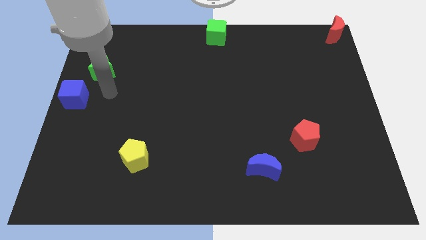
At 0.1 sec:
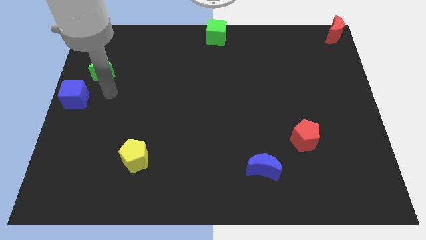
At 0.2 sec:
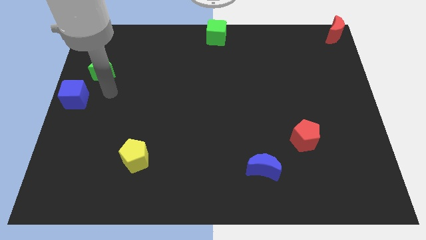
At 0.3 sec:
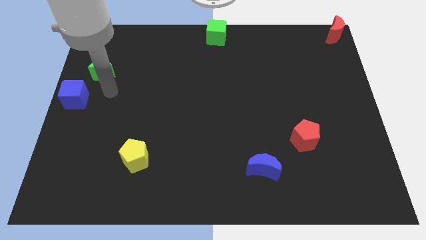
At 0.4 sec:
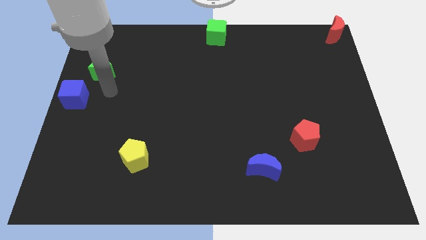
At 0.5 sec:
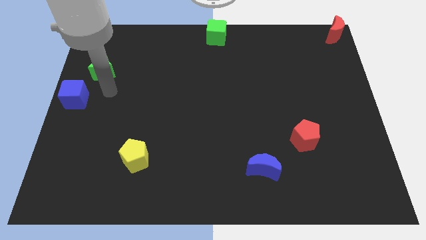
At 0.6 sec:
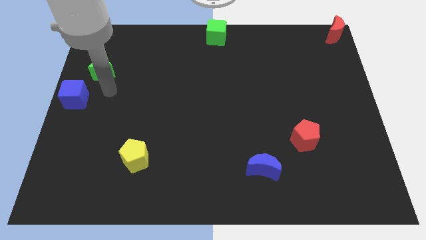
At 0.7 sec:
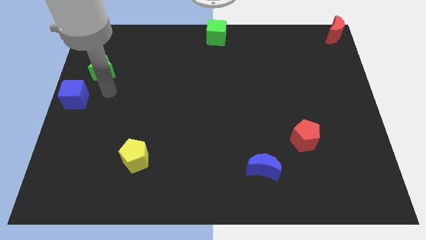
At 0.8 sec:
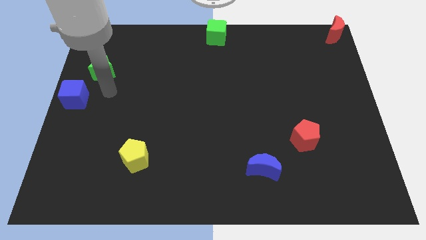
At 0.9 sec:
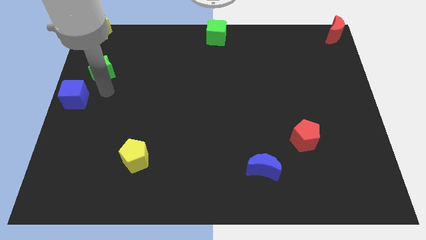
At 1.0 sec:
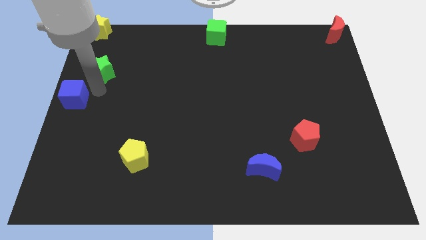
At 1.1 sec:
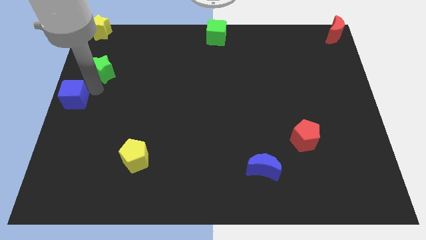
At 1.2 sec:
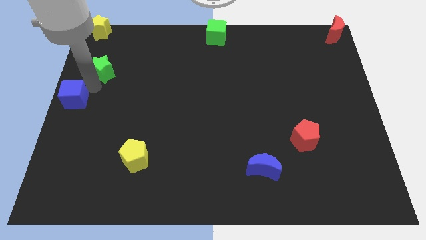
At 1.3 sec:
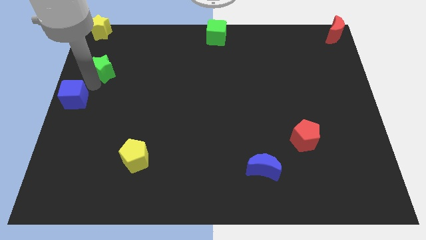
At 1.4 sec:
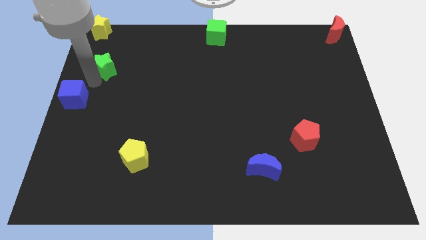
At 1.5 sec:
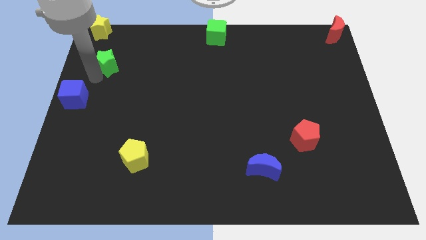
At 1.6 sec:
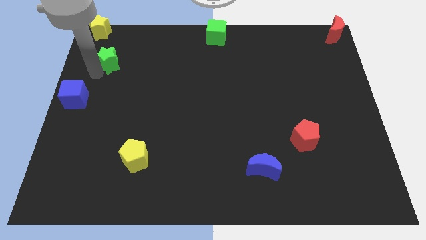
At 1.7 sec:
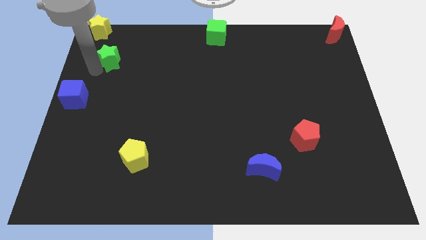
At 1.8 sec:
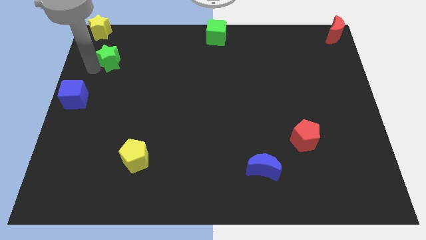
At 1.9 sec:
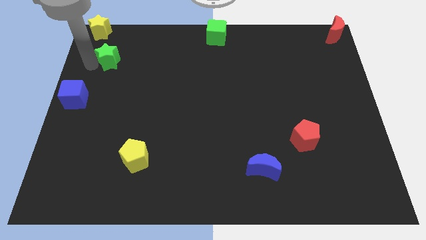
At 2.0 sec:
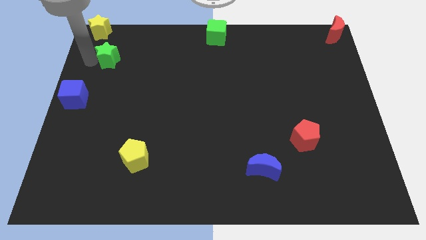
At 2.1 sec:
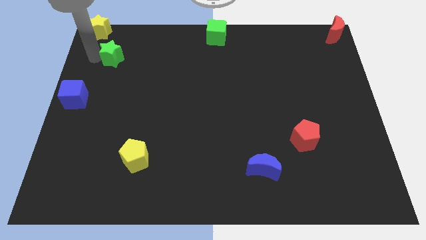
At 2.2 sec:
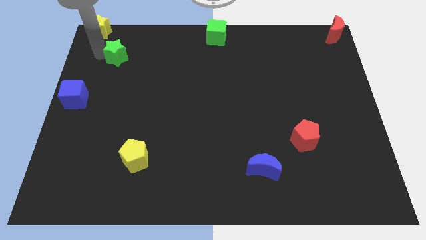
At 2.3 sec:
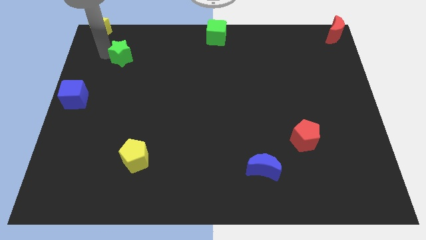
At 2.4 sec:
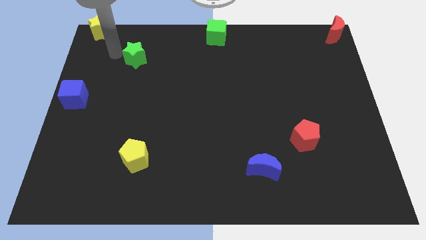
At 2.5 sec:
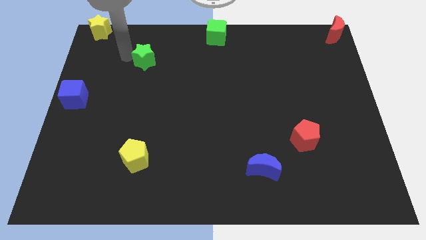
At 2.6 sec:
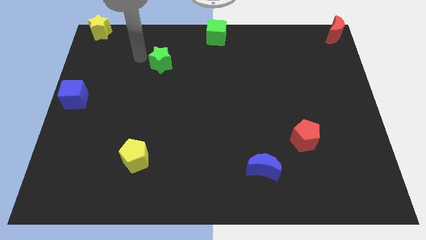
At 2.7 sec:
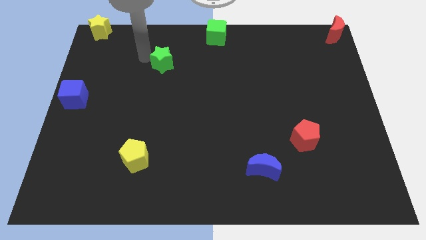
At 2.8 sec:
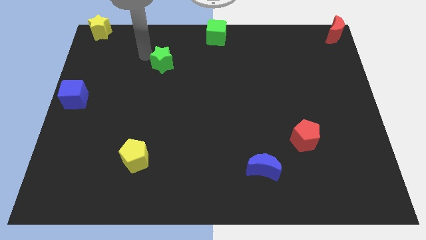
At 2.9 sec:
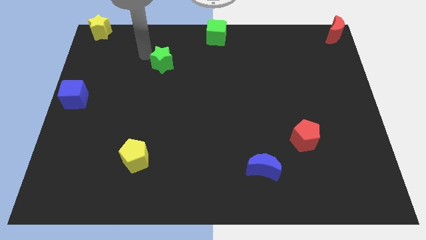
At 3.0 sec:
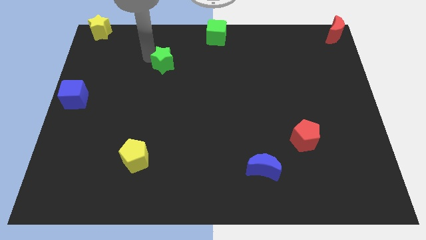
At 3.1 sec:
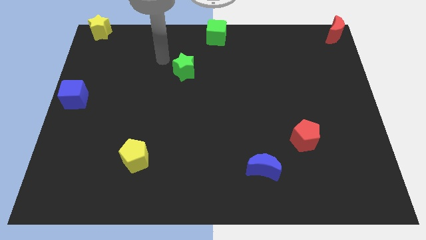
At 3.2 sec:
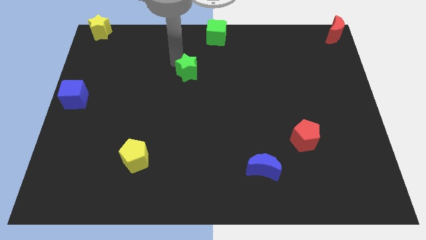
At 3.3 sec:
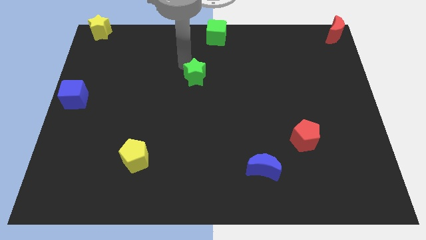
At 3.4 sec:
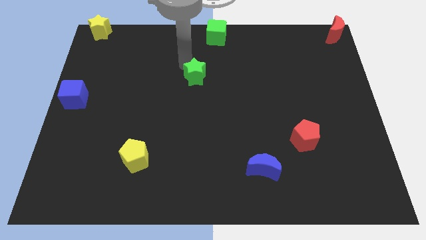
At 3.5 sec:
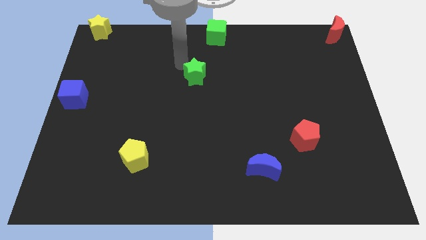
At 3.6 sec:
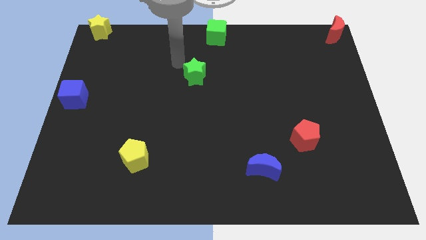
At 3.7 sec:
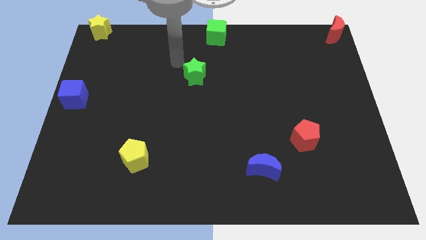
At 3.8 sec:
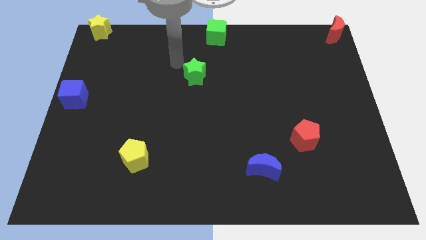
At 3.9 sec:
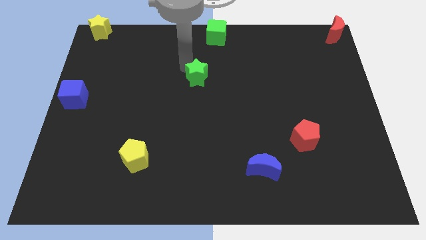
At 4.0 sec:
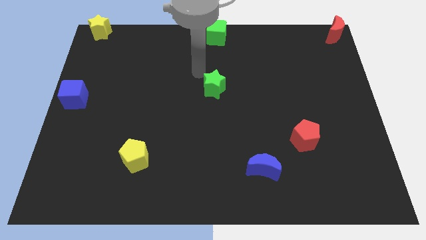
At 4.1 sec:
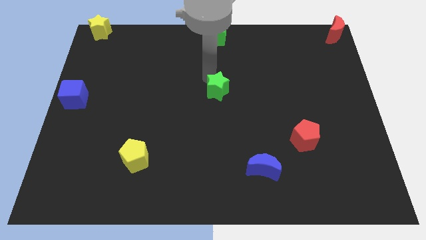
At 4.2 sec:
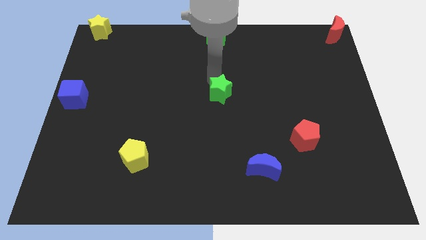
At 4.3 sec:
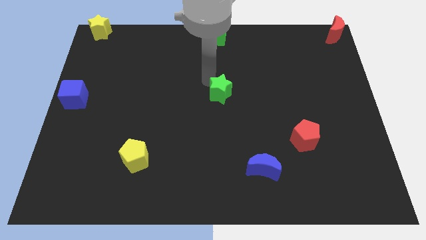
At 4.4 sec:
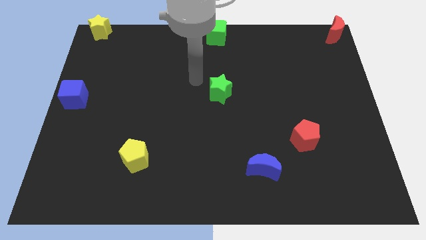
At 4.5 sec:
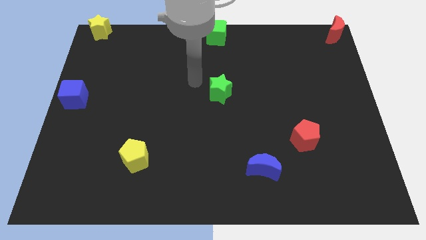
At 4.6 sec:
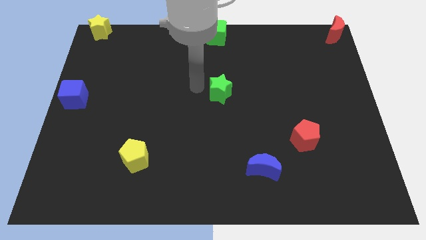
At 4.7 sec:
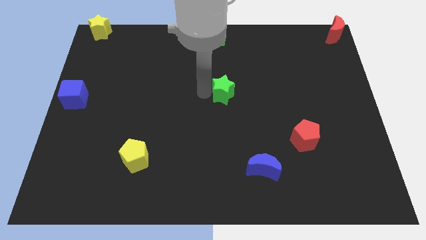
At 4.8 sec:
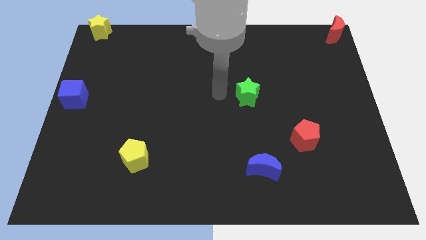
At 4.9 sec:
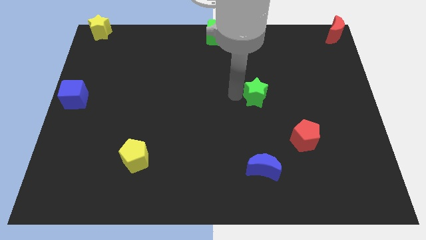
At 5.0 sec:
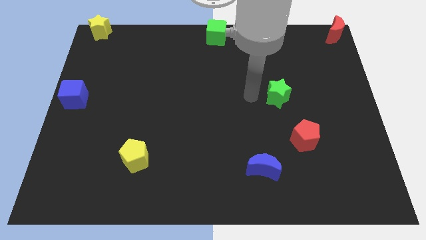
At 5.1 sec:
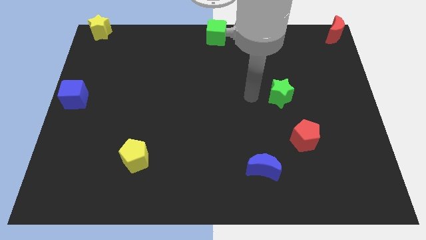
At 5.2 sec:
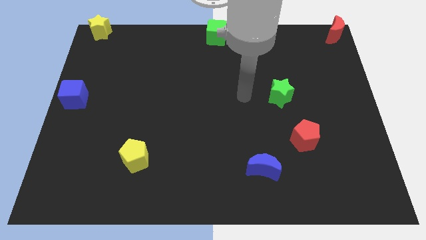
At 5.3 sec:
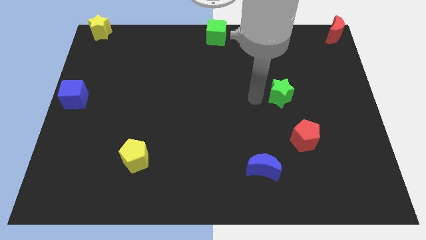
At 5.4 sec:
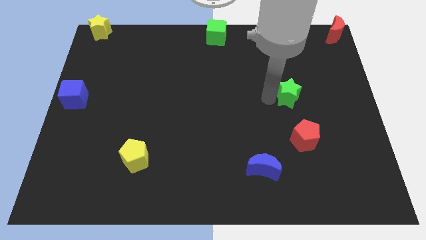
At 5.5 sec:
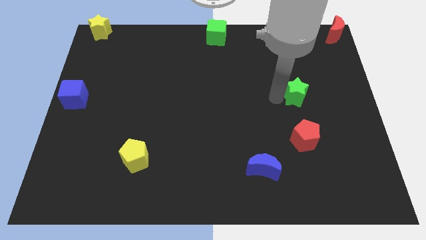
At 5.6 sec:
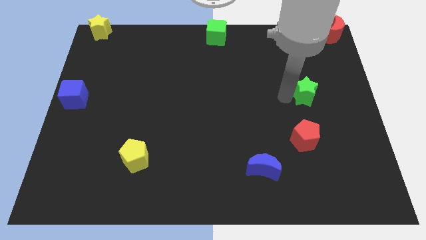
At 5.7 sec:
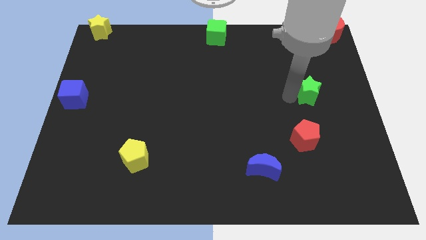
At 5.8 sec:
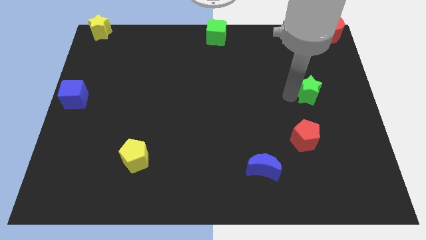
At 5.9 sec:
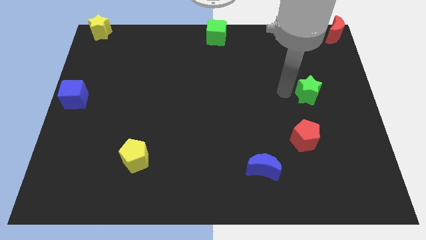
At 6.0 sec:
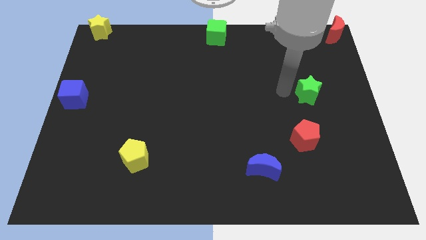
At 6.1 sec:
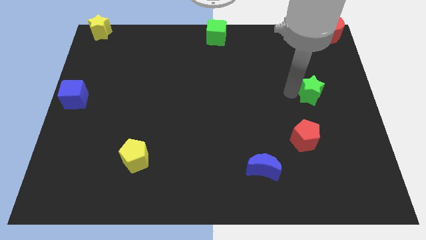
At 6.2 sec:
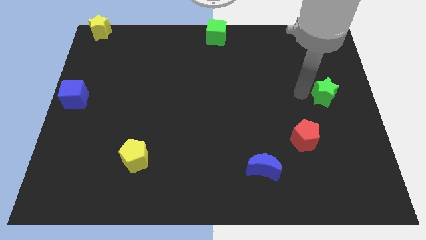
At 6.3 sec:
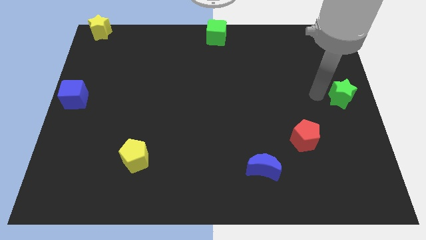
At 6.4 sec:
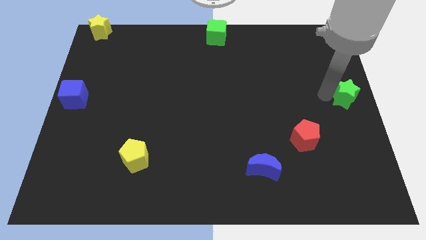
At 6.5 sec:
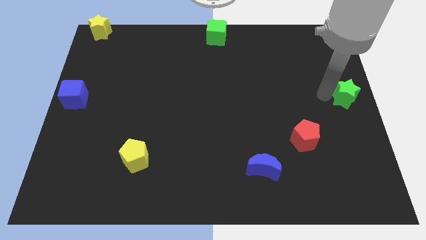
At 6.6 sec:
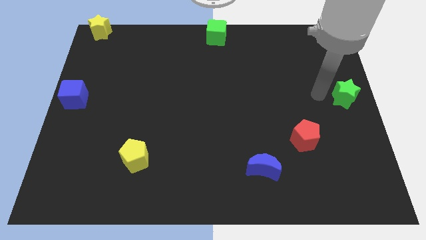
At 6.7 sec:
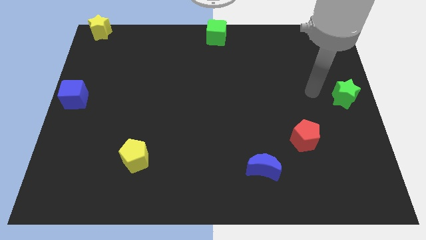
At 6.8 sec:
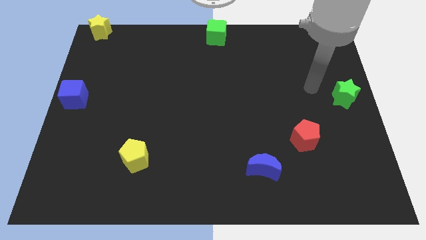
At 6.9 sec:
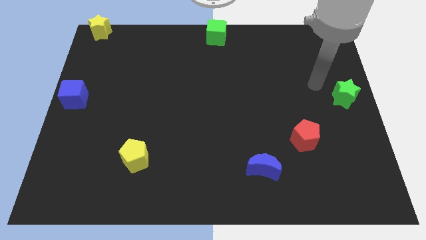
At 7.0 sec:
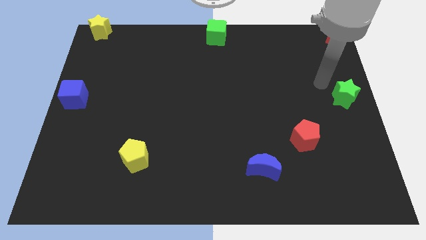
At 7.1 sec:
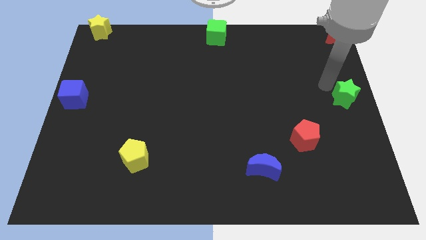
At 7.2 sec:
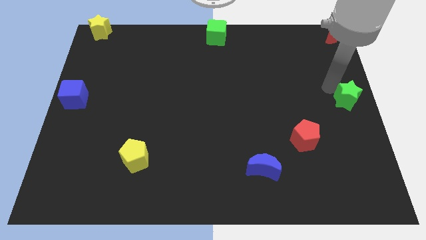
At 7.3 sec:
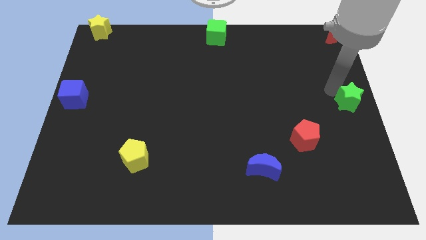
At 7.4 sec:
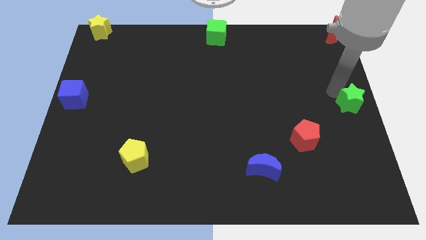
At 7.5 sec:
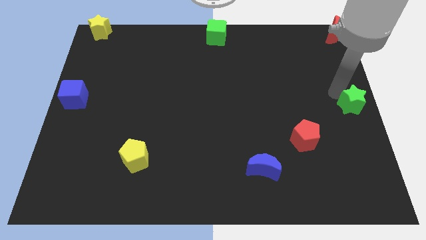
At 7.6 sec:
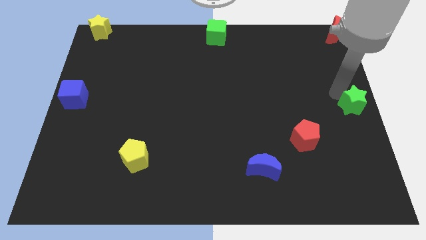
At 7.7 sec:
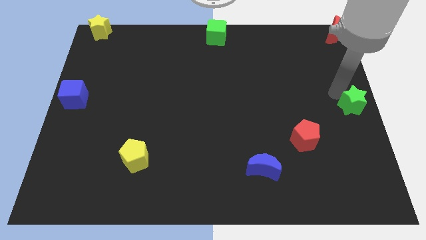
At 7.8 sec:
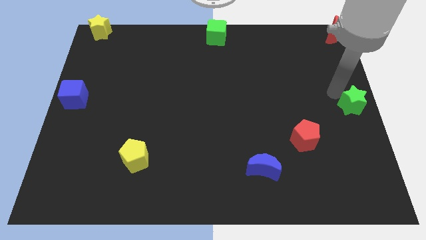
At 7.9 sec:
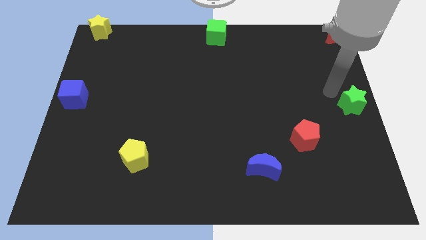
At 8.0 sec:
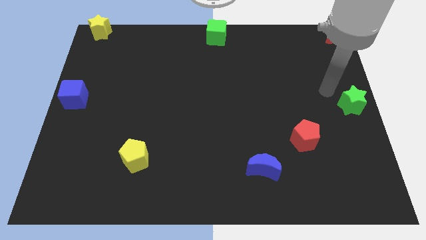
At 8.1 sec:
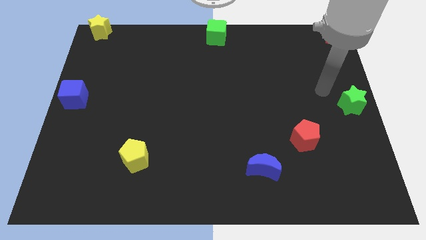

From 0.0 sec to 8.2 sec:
push the green star towards the right center of the board

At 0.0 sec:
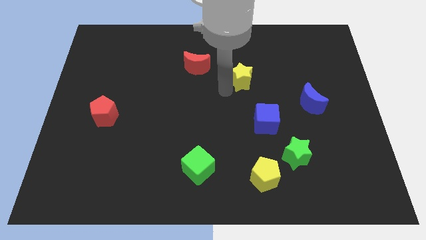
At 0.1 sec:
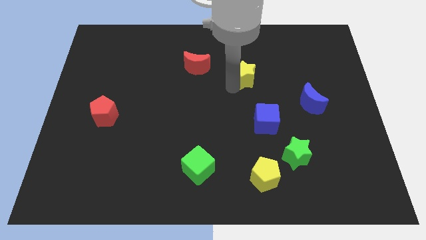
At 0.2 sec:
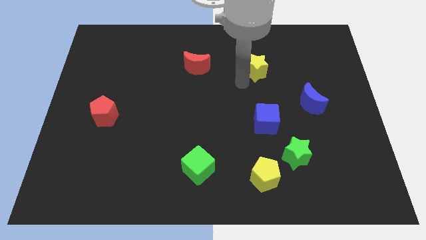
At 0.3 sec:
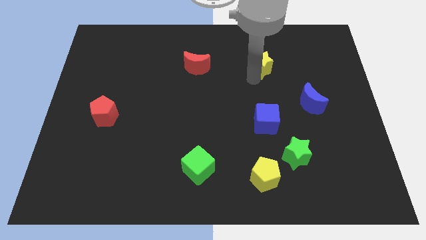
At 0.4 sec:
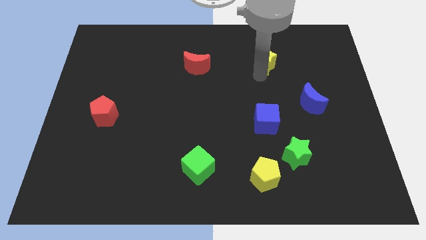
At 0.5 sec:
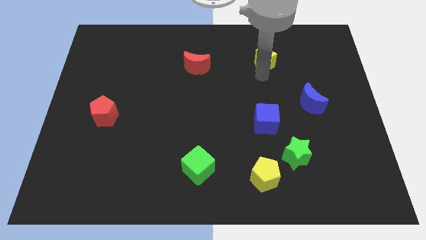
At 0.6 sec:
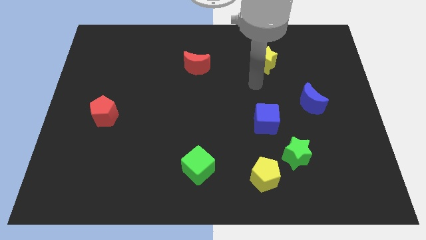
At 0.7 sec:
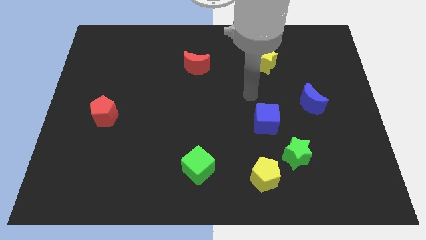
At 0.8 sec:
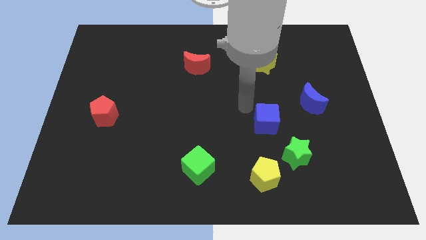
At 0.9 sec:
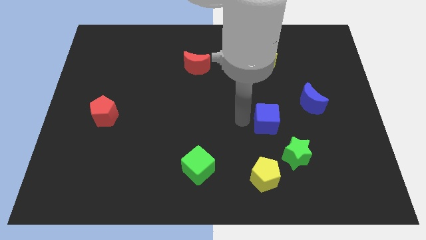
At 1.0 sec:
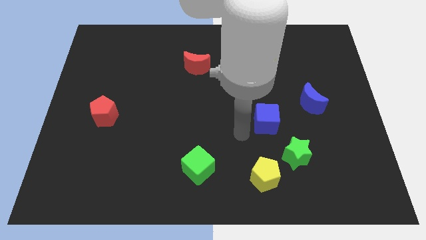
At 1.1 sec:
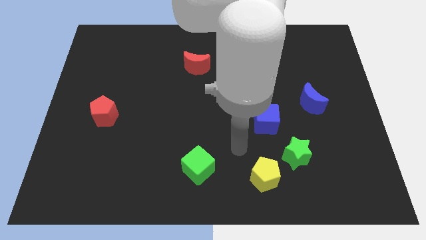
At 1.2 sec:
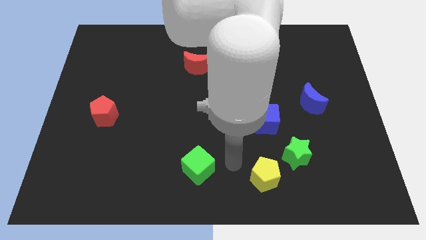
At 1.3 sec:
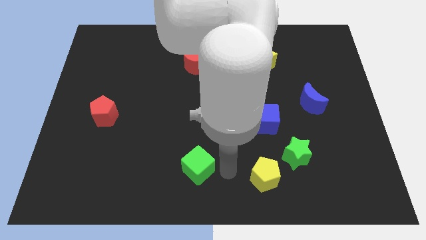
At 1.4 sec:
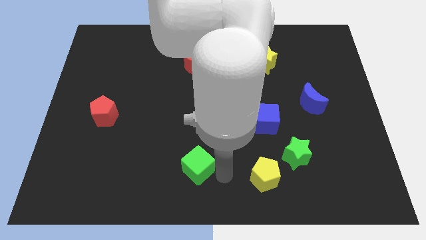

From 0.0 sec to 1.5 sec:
move the yellow star parallel to red crescent
